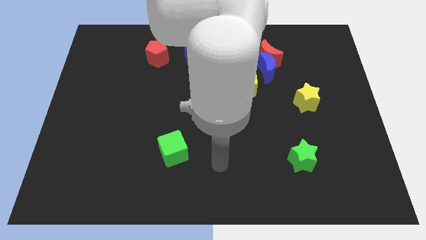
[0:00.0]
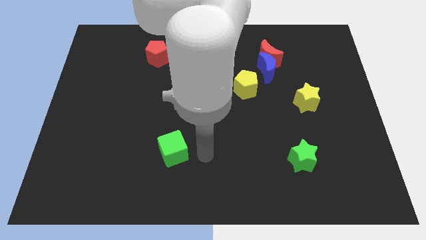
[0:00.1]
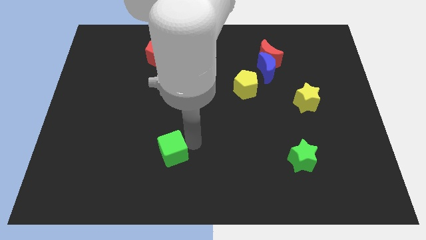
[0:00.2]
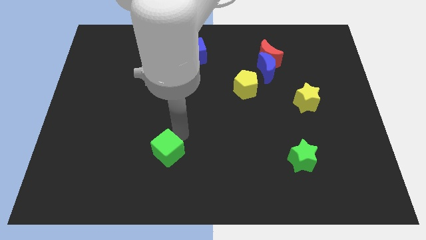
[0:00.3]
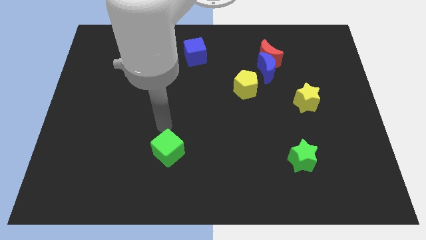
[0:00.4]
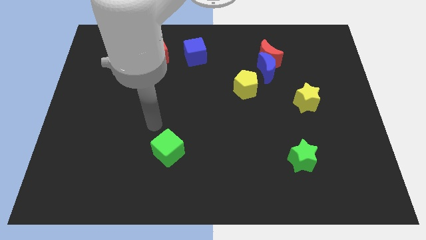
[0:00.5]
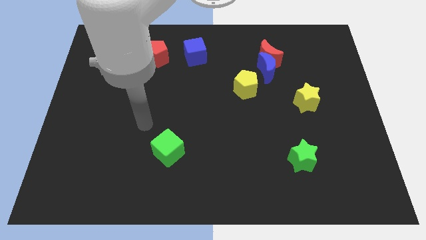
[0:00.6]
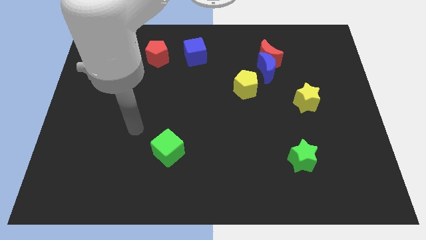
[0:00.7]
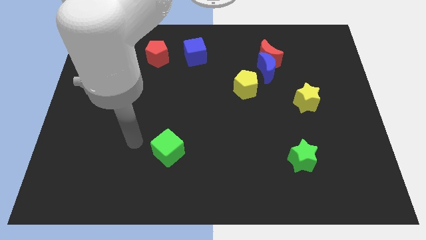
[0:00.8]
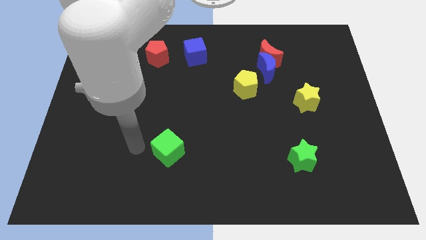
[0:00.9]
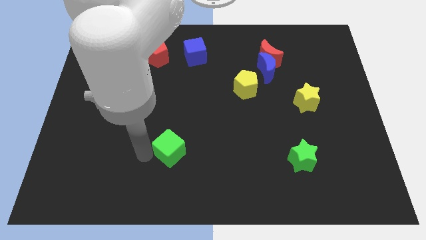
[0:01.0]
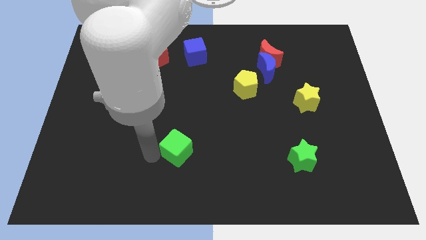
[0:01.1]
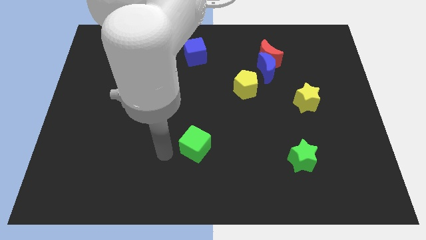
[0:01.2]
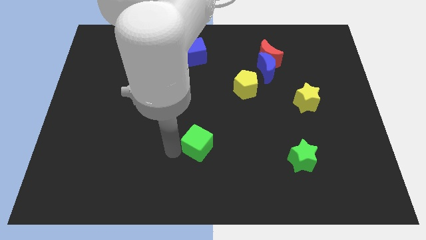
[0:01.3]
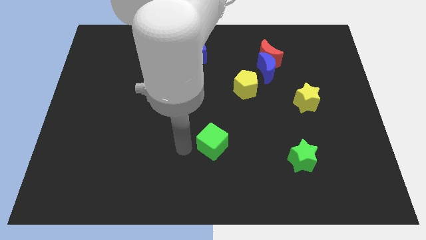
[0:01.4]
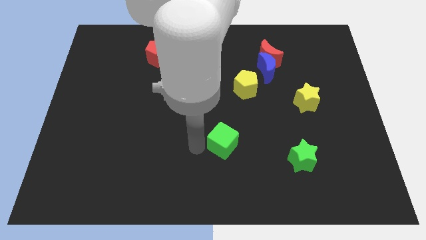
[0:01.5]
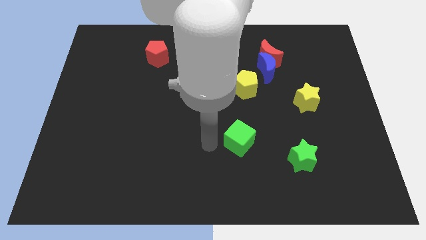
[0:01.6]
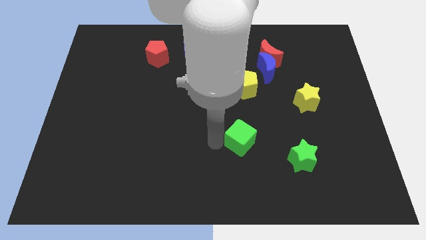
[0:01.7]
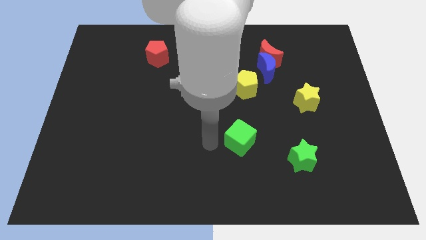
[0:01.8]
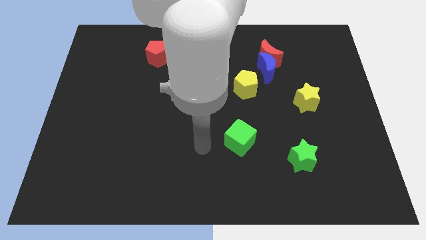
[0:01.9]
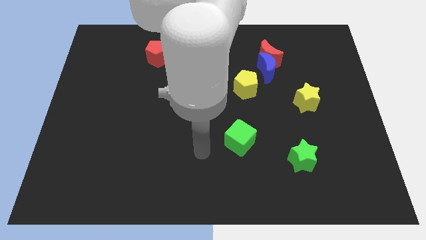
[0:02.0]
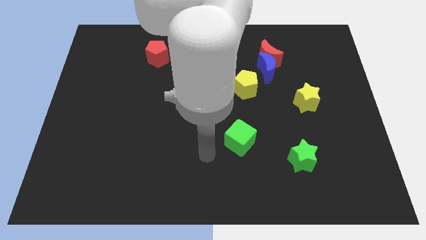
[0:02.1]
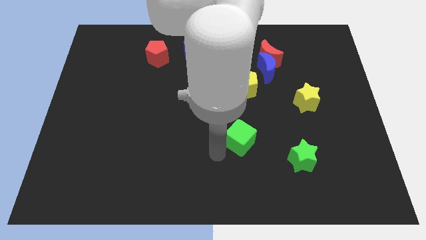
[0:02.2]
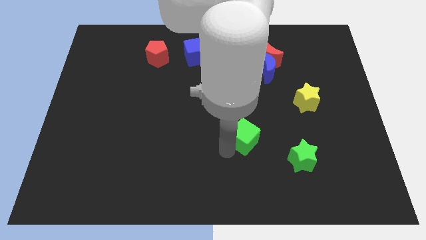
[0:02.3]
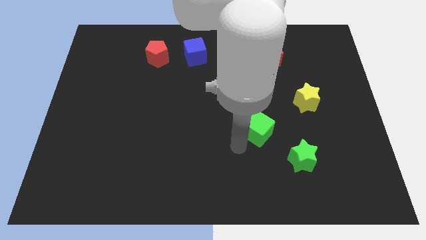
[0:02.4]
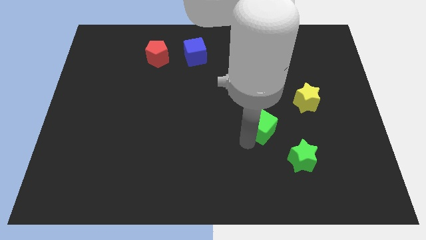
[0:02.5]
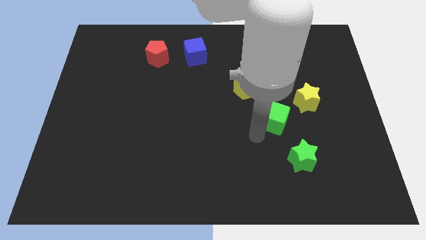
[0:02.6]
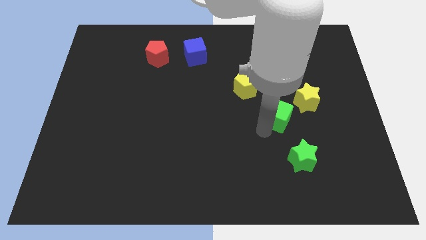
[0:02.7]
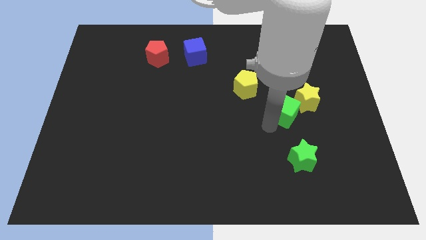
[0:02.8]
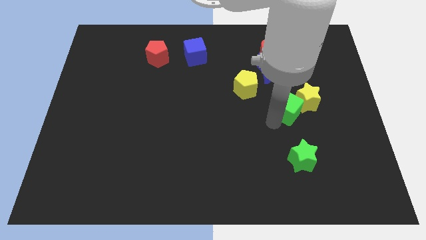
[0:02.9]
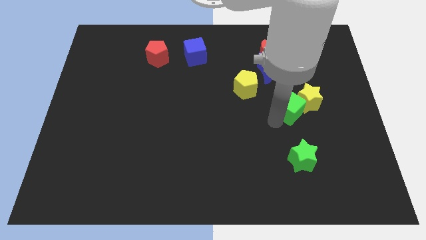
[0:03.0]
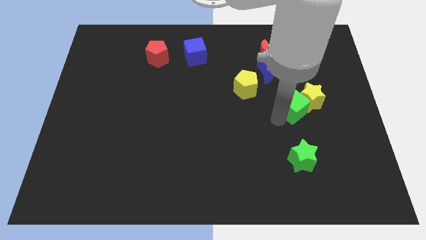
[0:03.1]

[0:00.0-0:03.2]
push the green cube next to the yellow star

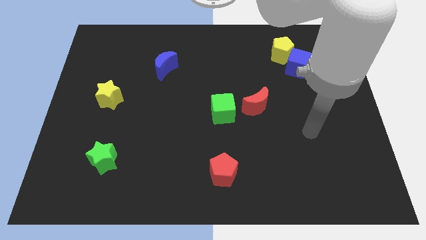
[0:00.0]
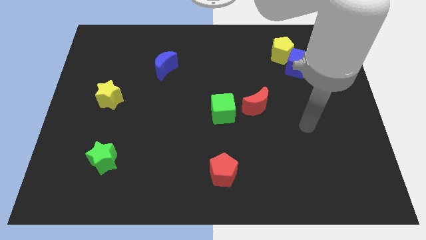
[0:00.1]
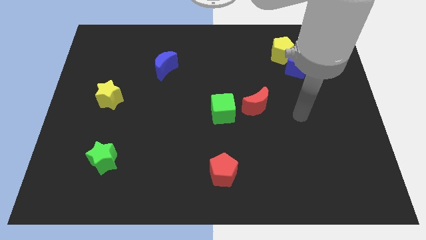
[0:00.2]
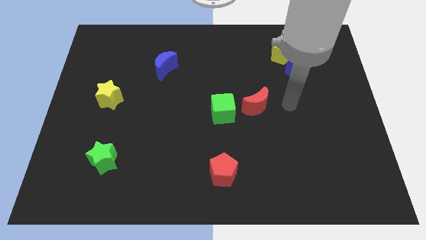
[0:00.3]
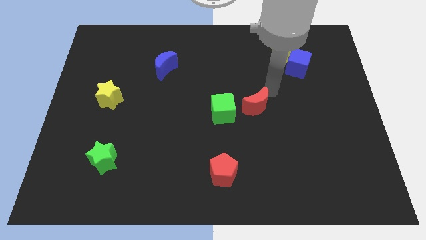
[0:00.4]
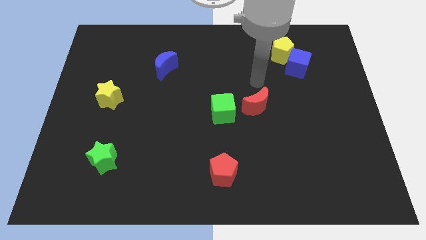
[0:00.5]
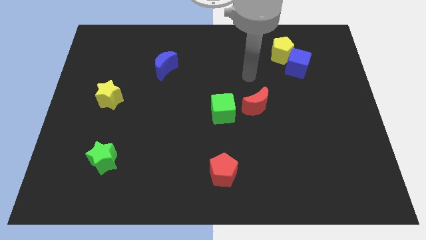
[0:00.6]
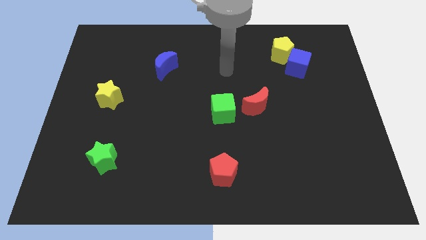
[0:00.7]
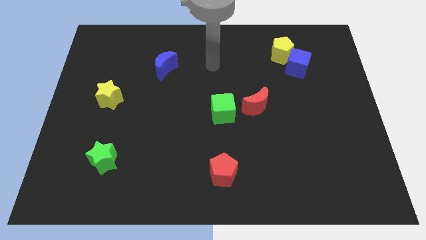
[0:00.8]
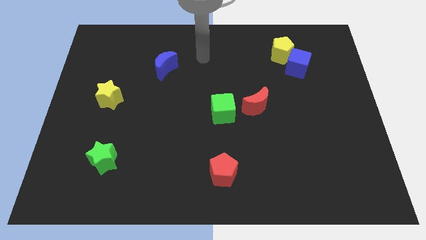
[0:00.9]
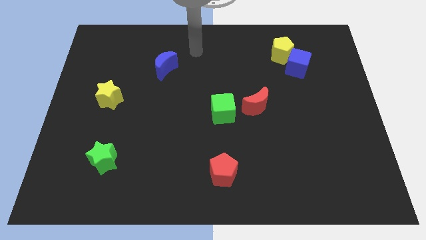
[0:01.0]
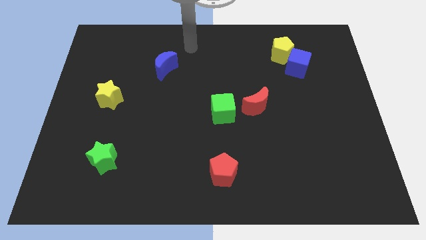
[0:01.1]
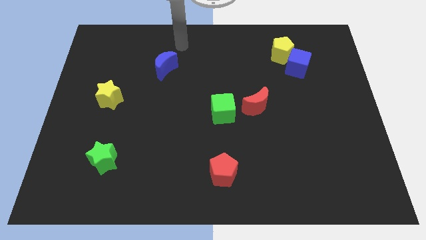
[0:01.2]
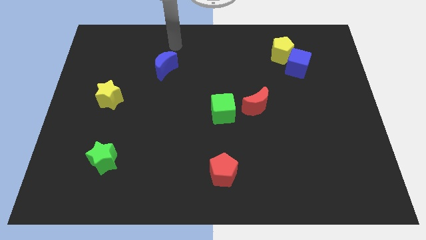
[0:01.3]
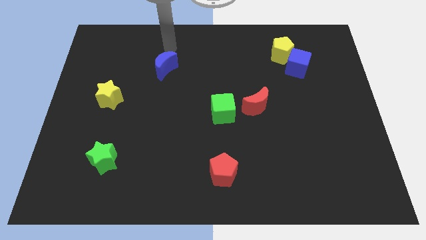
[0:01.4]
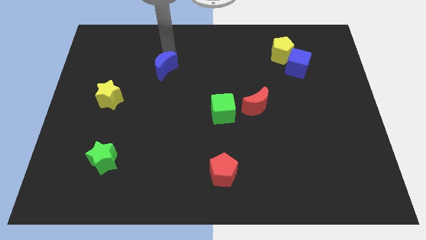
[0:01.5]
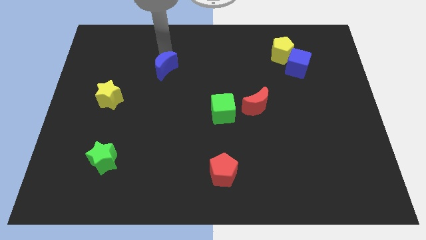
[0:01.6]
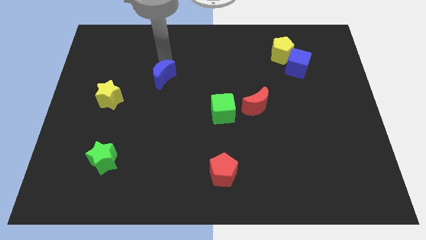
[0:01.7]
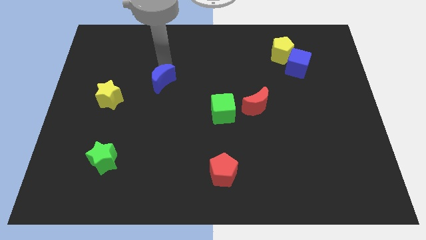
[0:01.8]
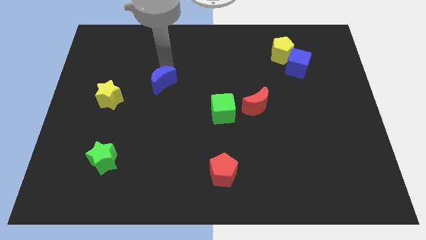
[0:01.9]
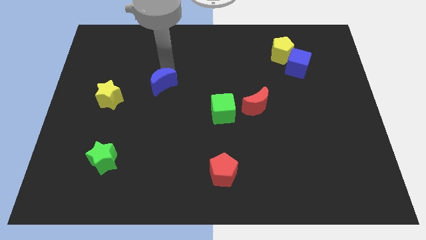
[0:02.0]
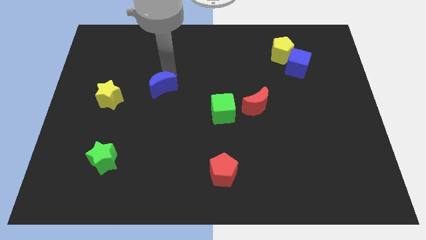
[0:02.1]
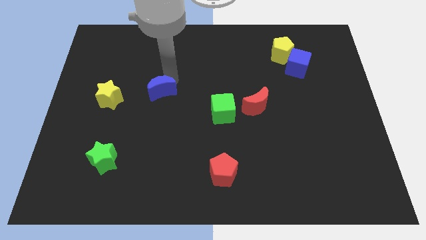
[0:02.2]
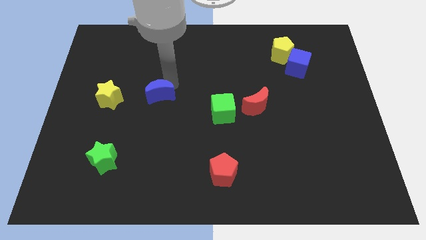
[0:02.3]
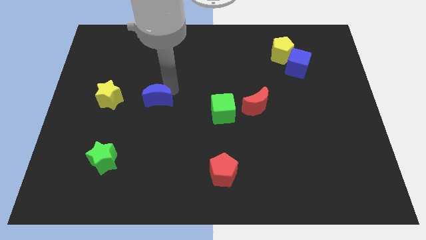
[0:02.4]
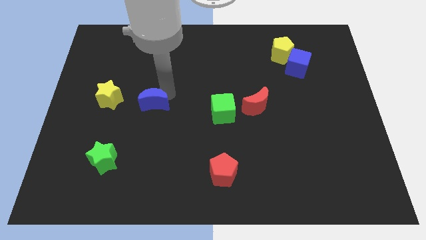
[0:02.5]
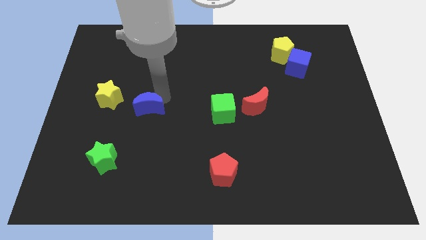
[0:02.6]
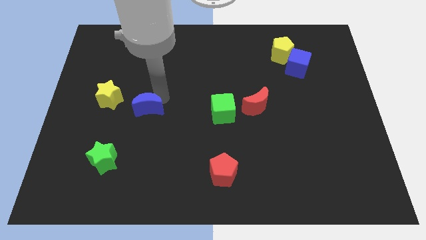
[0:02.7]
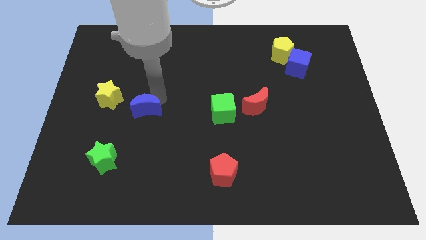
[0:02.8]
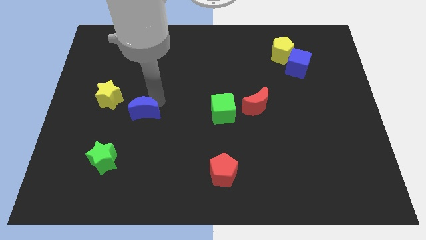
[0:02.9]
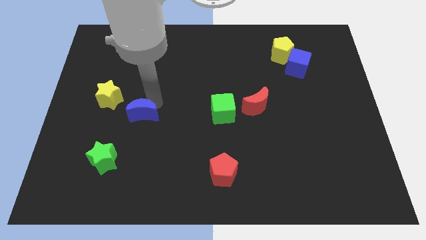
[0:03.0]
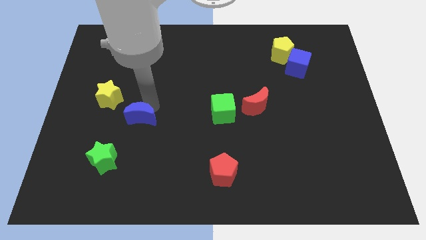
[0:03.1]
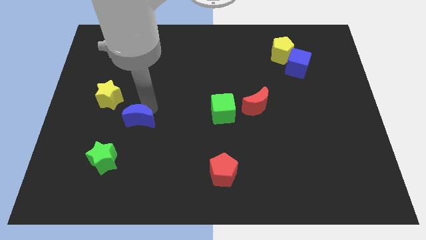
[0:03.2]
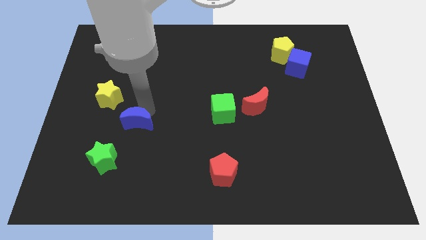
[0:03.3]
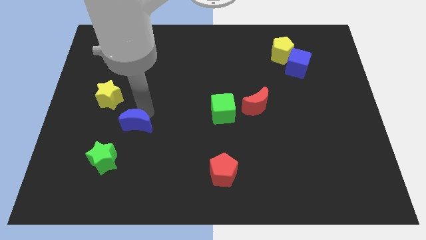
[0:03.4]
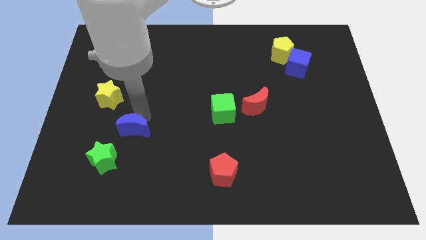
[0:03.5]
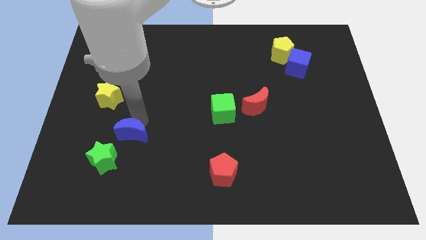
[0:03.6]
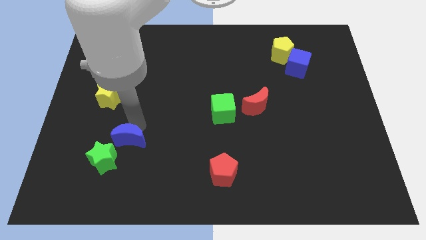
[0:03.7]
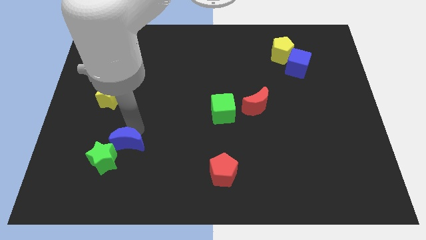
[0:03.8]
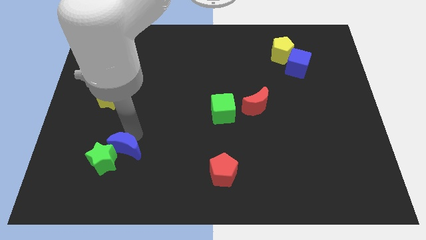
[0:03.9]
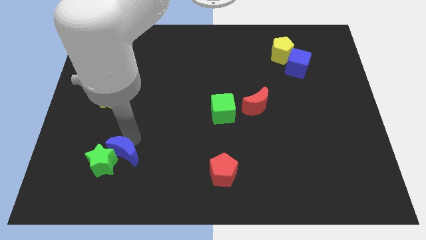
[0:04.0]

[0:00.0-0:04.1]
move the blue moon to the green star

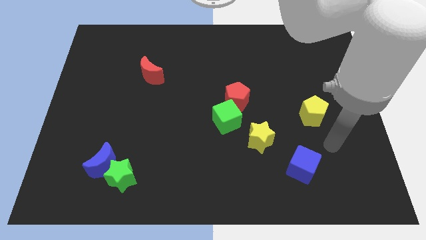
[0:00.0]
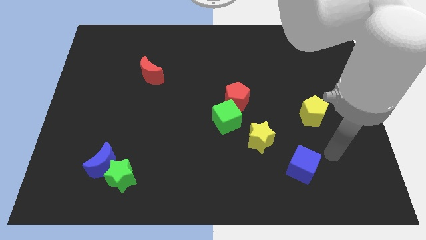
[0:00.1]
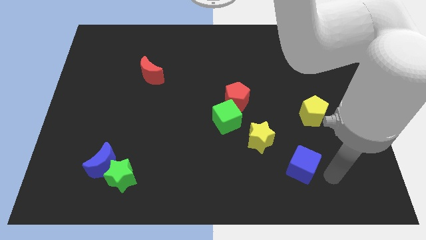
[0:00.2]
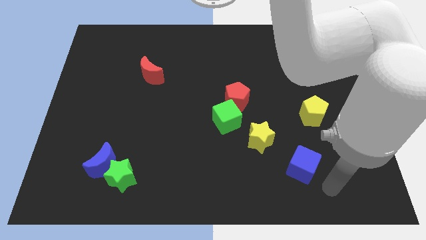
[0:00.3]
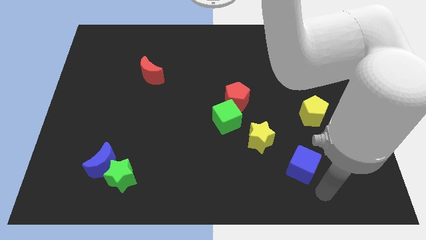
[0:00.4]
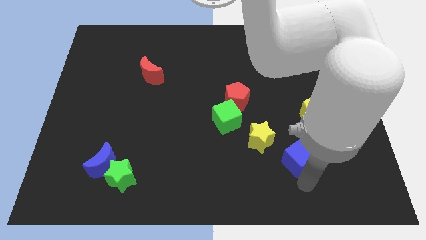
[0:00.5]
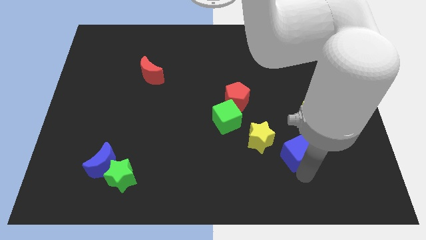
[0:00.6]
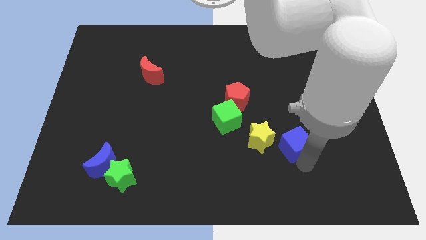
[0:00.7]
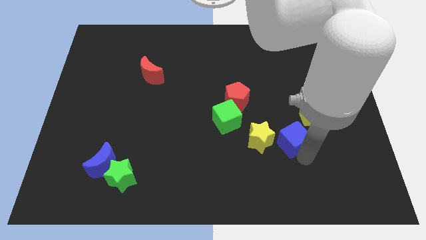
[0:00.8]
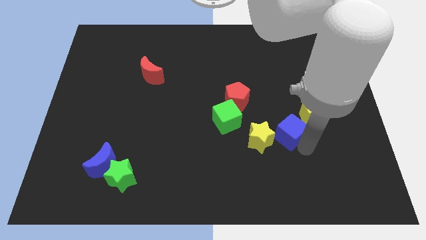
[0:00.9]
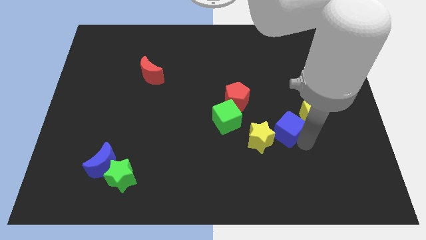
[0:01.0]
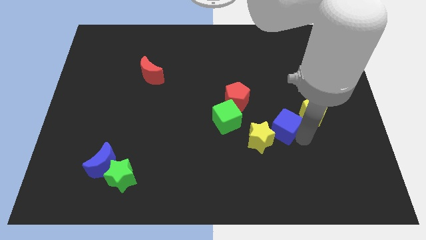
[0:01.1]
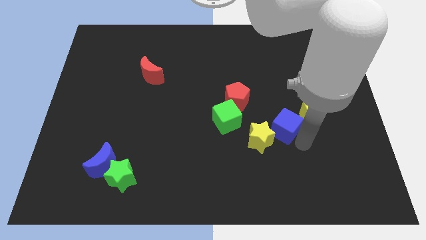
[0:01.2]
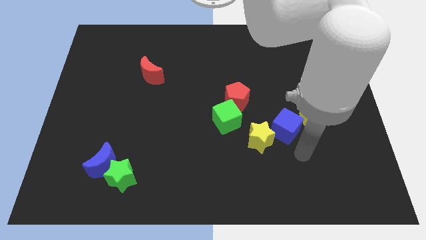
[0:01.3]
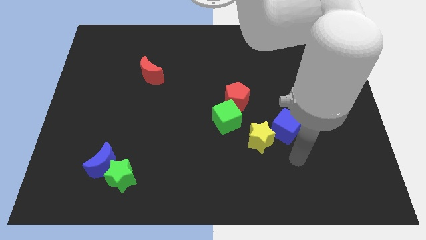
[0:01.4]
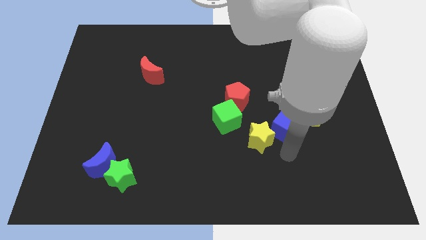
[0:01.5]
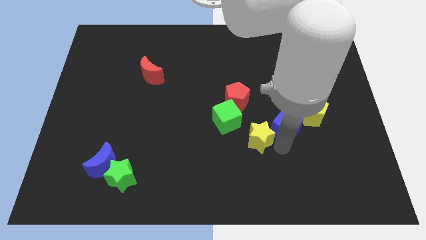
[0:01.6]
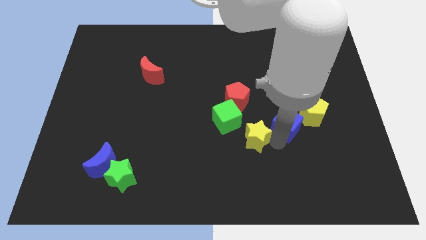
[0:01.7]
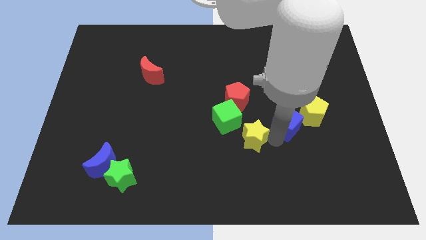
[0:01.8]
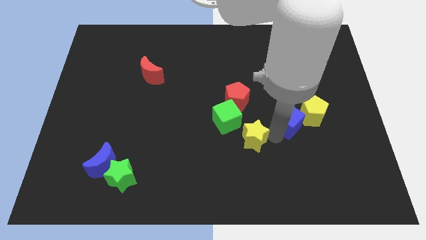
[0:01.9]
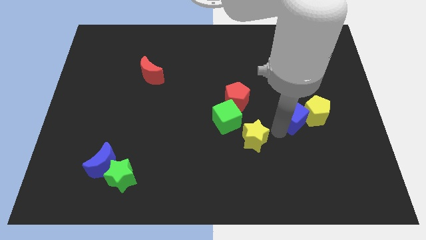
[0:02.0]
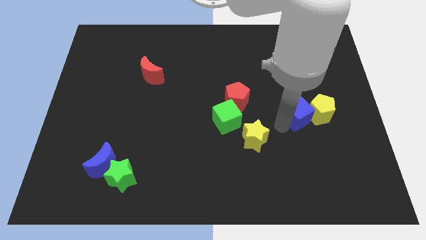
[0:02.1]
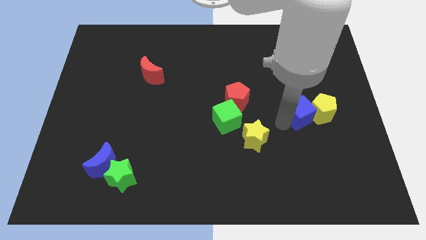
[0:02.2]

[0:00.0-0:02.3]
slide the blue cube close to the yellow pentagon
